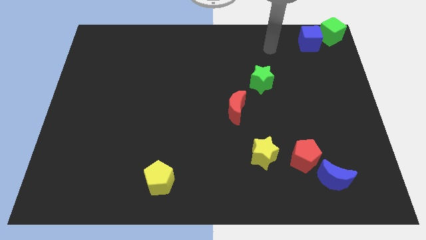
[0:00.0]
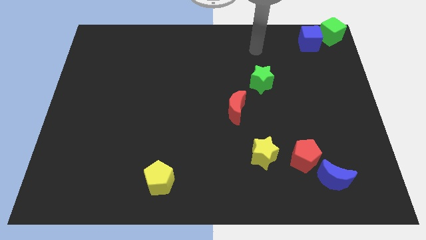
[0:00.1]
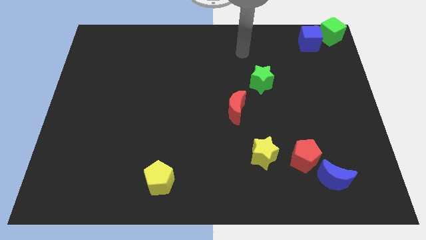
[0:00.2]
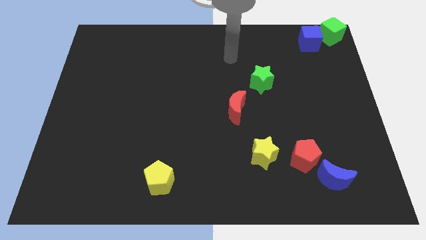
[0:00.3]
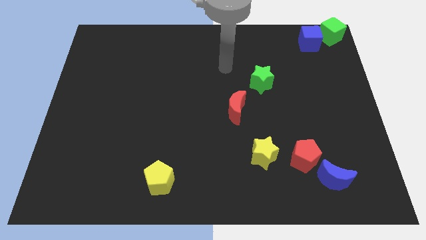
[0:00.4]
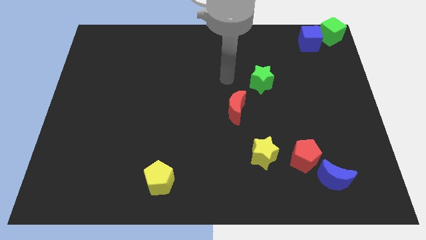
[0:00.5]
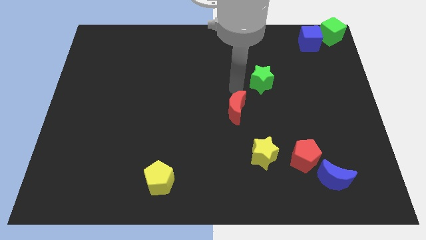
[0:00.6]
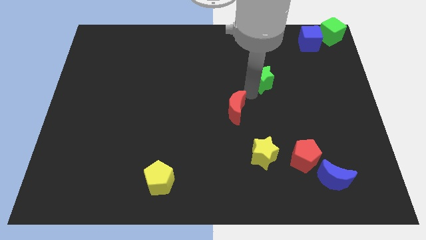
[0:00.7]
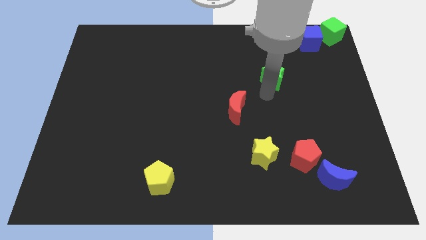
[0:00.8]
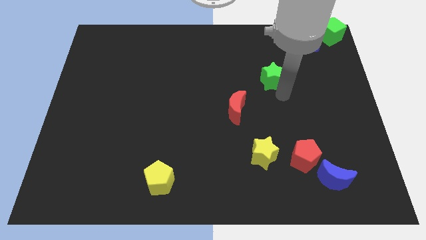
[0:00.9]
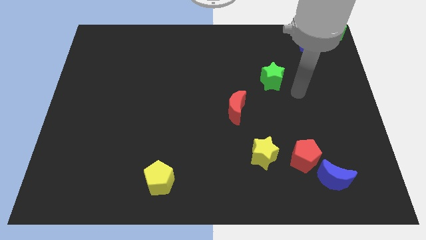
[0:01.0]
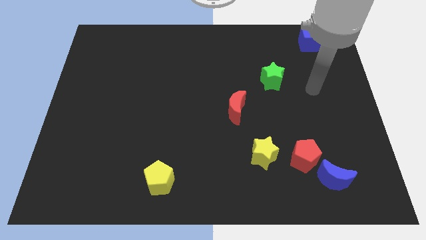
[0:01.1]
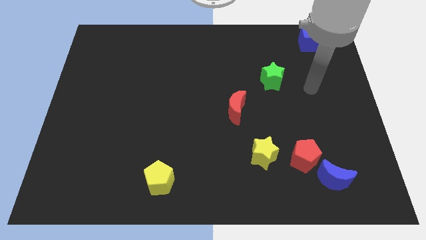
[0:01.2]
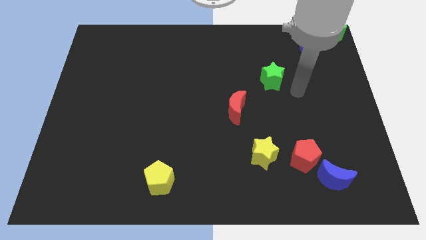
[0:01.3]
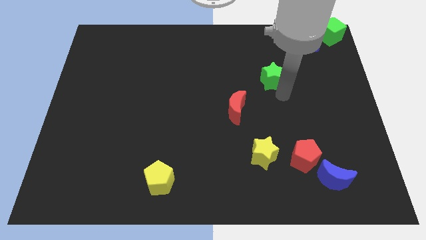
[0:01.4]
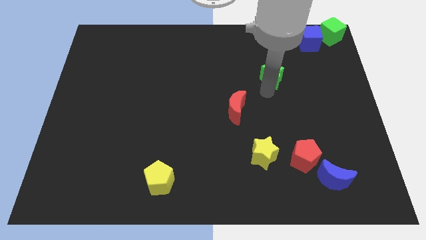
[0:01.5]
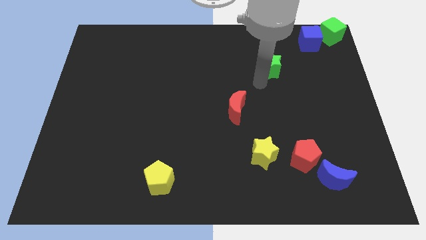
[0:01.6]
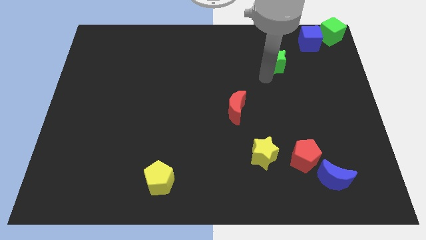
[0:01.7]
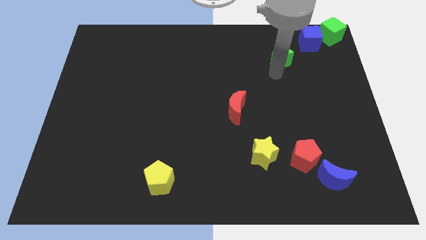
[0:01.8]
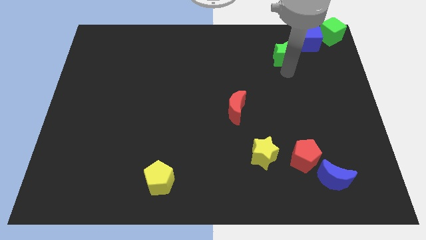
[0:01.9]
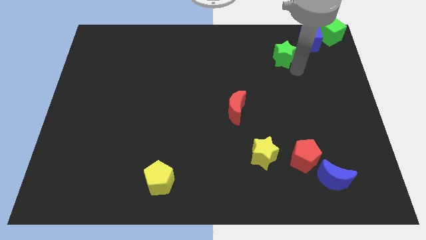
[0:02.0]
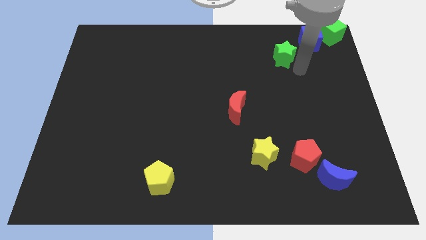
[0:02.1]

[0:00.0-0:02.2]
push the green star to the bottom left side of the blue cube

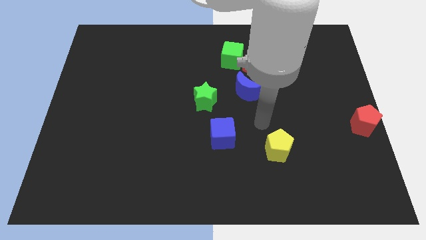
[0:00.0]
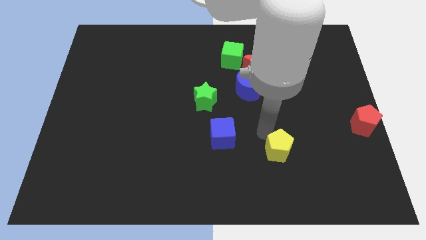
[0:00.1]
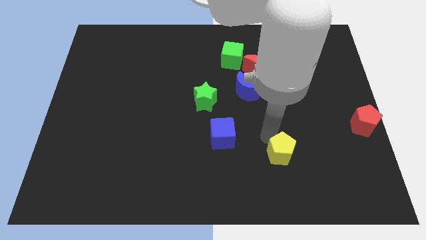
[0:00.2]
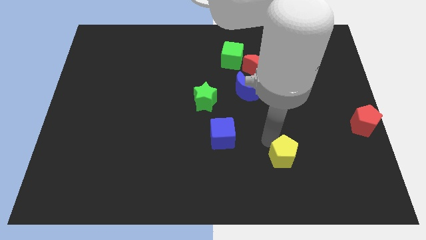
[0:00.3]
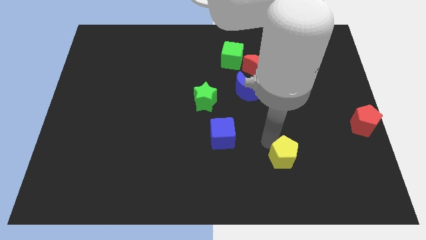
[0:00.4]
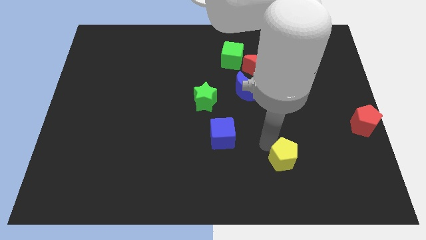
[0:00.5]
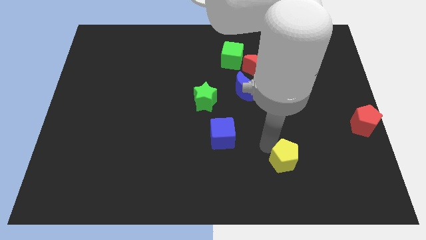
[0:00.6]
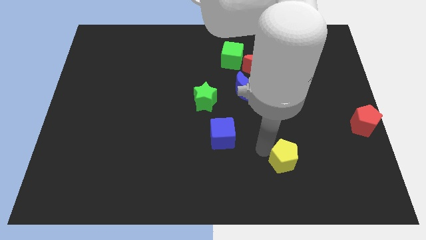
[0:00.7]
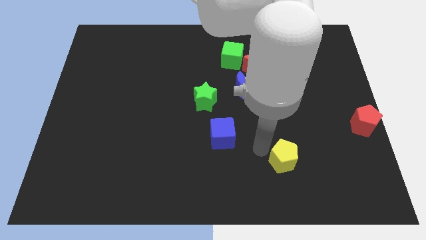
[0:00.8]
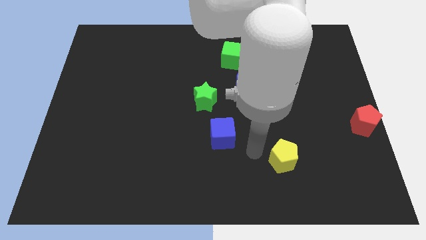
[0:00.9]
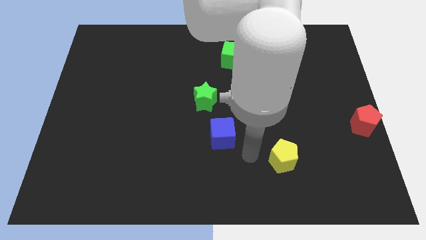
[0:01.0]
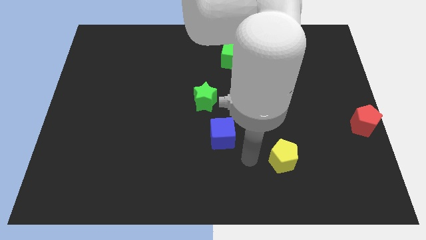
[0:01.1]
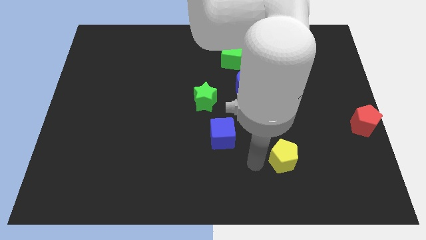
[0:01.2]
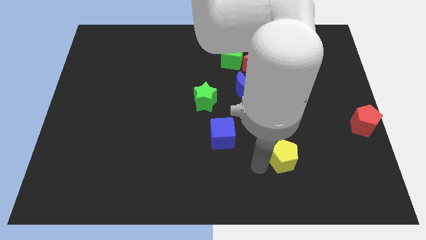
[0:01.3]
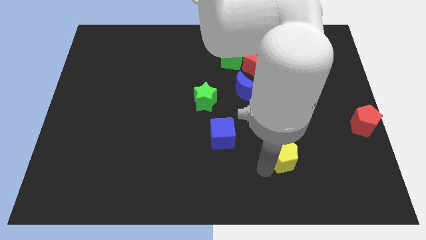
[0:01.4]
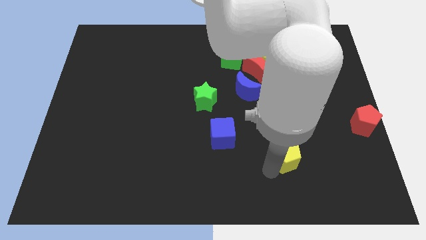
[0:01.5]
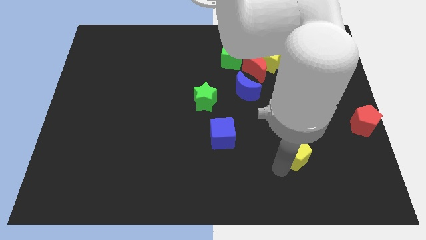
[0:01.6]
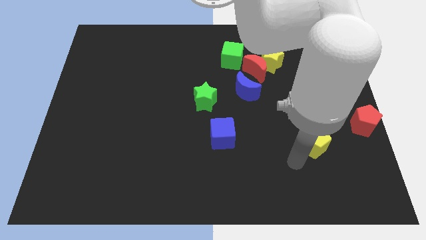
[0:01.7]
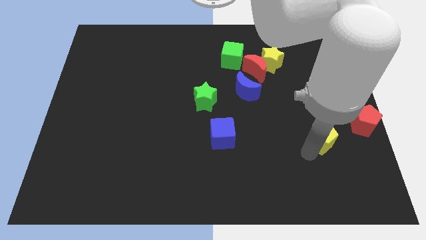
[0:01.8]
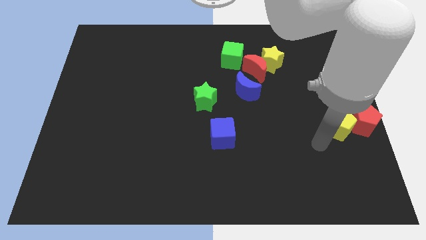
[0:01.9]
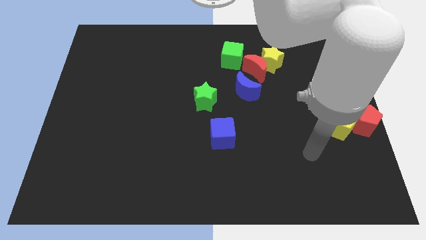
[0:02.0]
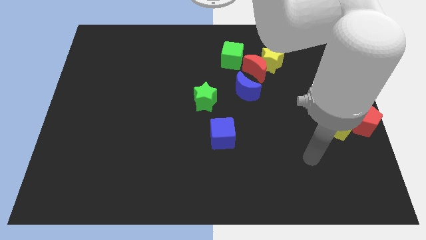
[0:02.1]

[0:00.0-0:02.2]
push the yellow pentagon into the red pentagon

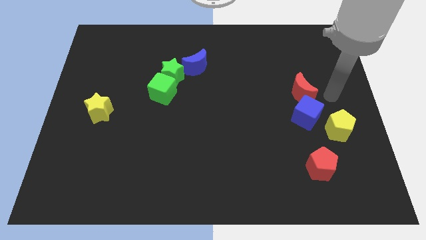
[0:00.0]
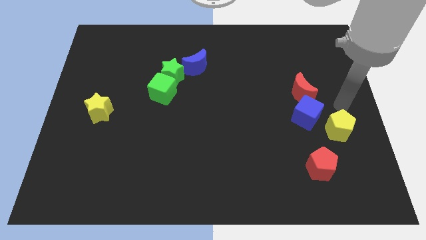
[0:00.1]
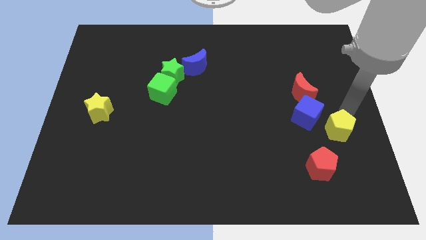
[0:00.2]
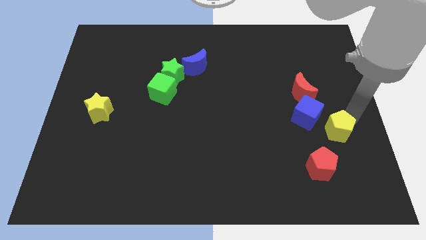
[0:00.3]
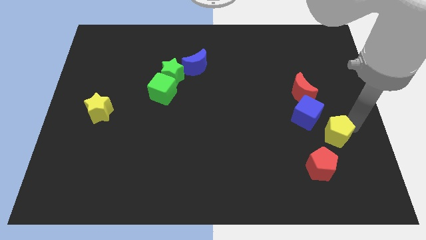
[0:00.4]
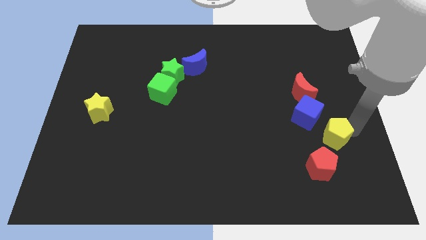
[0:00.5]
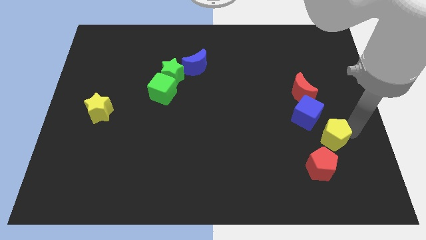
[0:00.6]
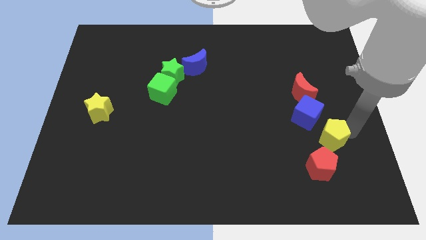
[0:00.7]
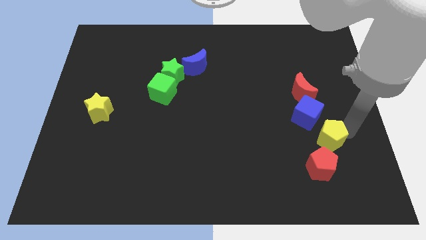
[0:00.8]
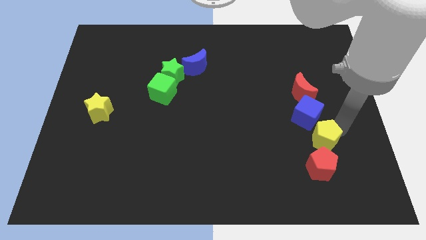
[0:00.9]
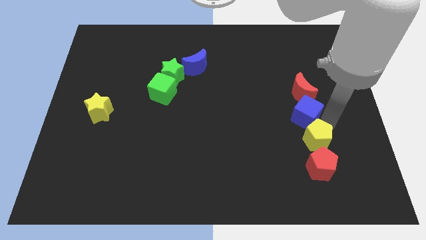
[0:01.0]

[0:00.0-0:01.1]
place the yellow pentagon in between the blue cube and red pentagon

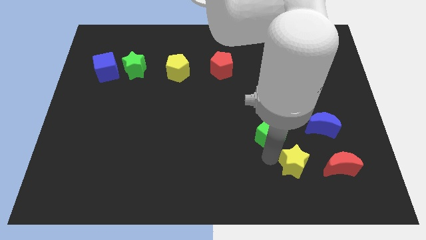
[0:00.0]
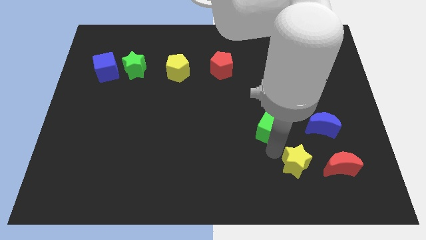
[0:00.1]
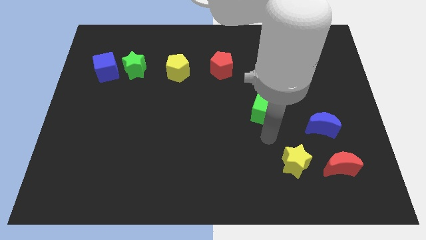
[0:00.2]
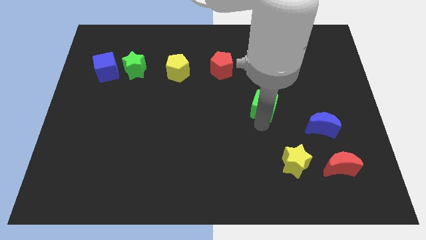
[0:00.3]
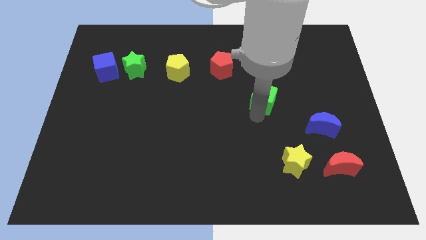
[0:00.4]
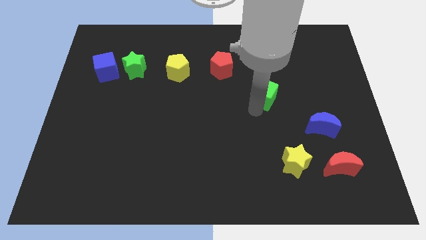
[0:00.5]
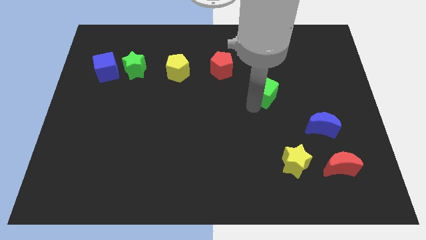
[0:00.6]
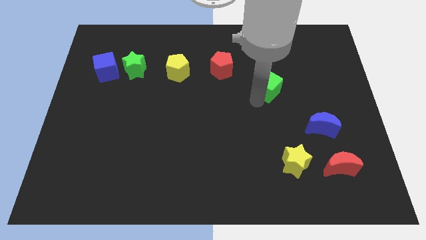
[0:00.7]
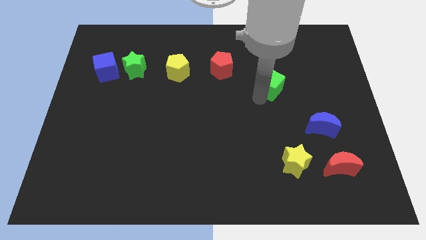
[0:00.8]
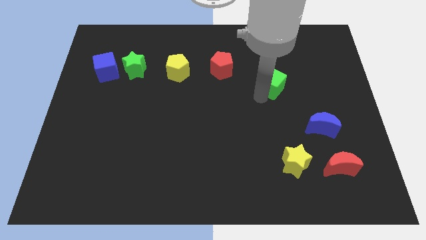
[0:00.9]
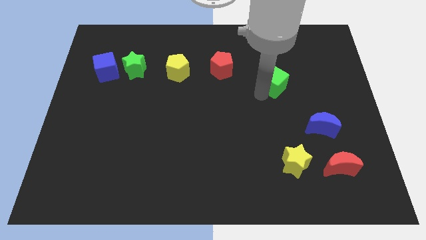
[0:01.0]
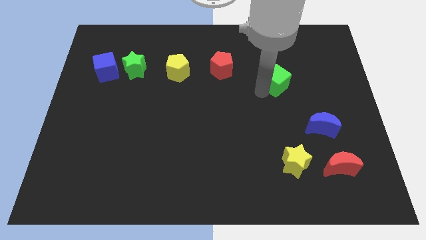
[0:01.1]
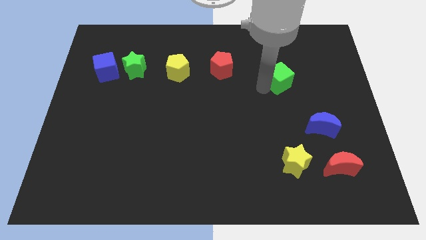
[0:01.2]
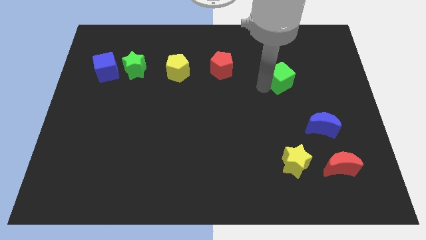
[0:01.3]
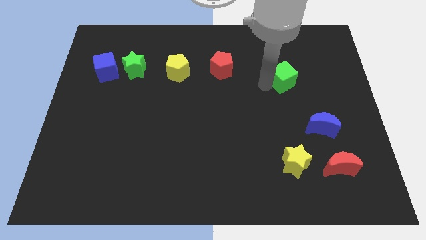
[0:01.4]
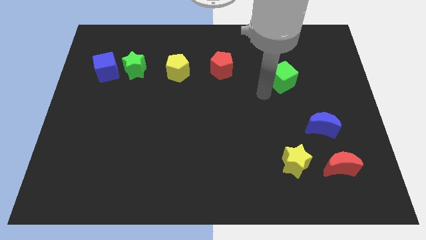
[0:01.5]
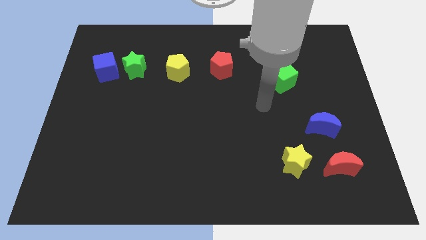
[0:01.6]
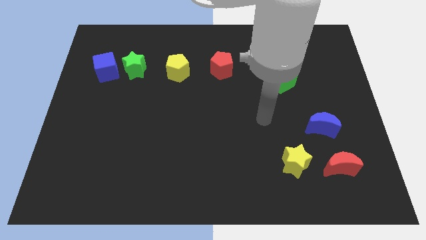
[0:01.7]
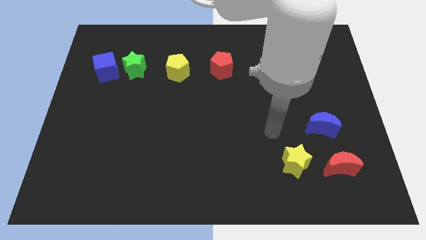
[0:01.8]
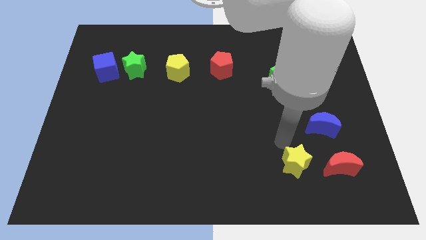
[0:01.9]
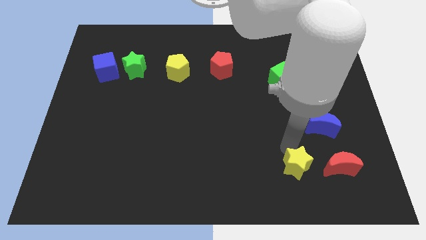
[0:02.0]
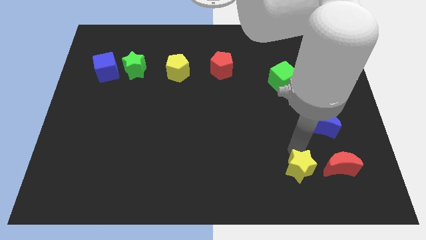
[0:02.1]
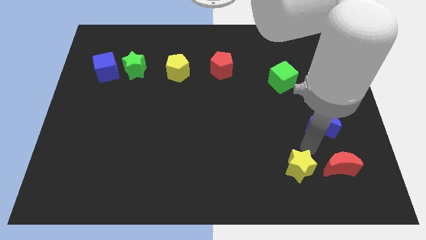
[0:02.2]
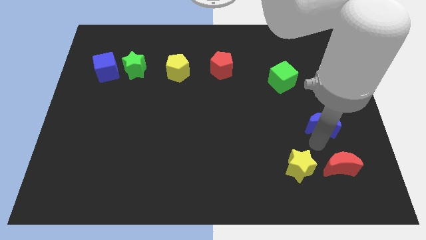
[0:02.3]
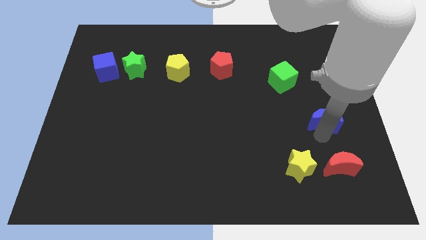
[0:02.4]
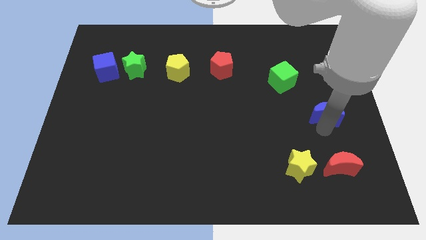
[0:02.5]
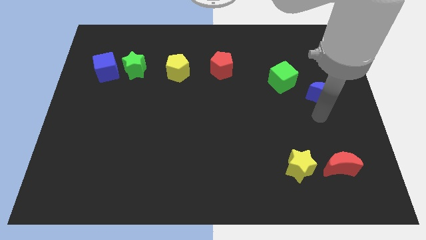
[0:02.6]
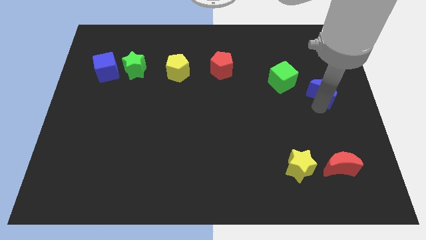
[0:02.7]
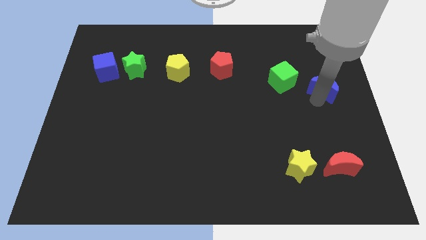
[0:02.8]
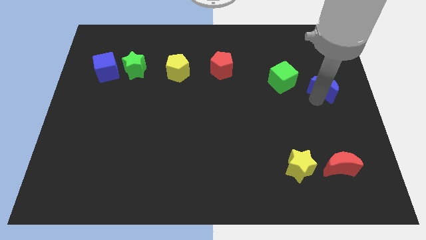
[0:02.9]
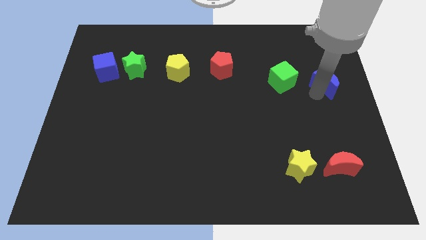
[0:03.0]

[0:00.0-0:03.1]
move blue moon to the right side of the green cube

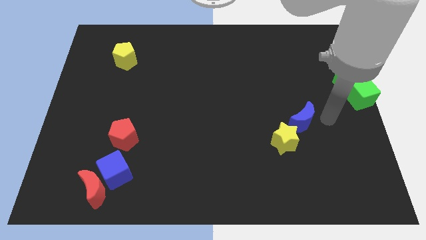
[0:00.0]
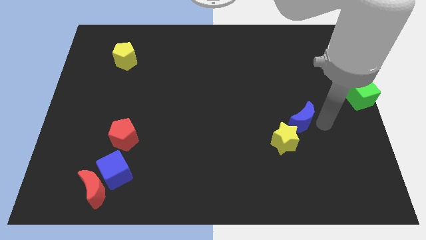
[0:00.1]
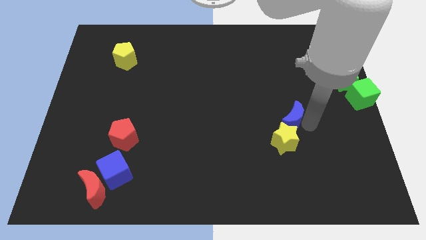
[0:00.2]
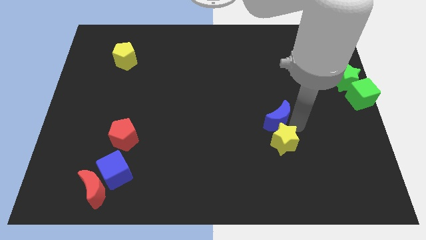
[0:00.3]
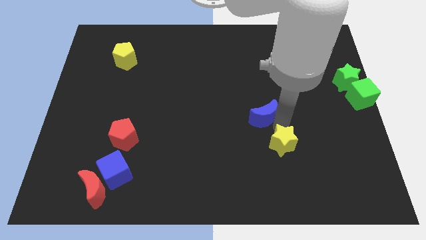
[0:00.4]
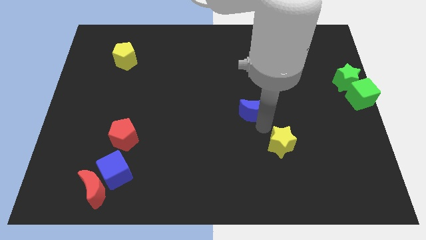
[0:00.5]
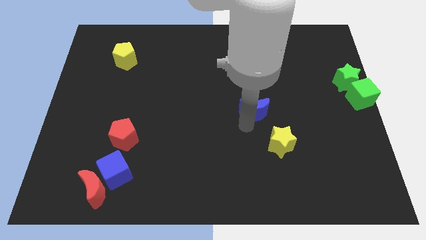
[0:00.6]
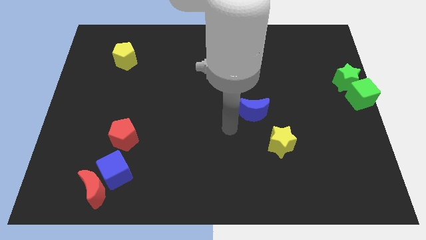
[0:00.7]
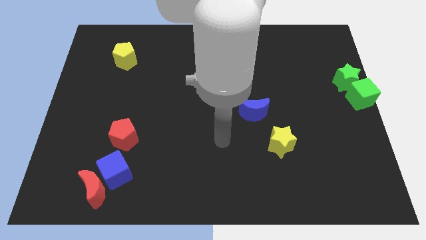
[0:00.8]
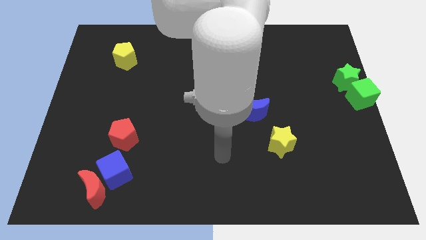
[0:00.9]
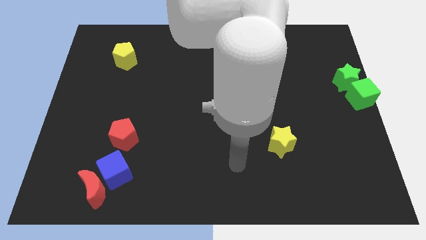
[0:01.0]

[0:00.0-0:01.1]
separate the blue crescent from the yellow star
